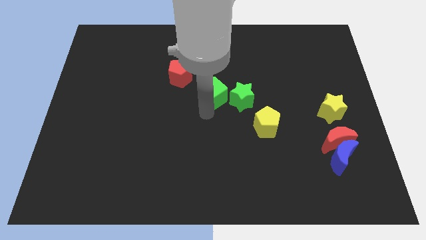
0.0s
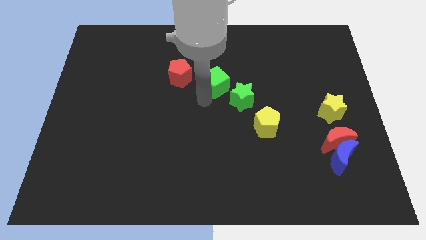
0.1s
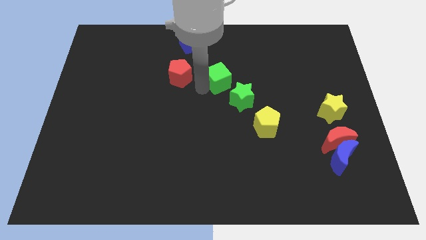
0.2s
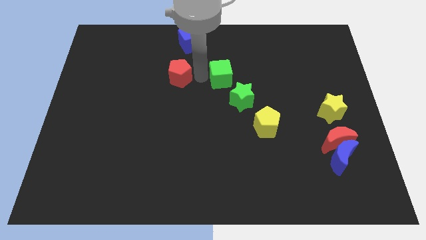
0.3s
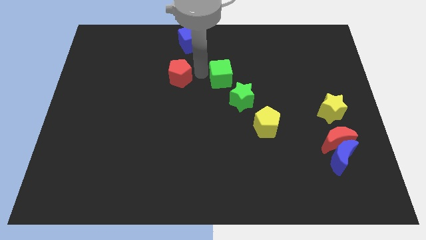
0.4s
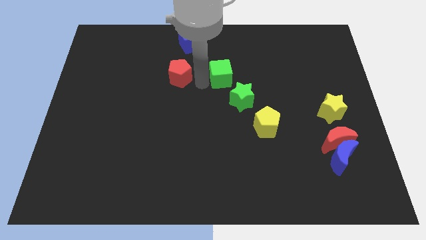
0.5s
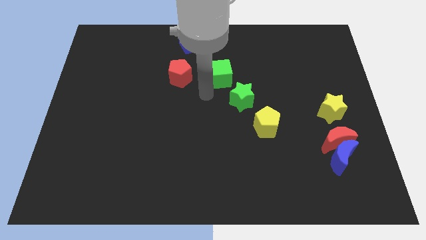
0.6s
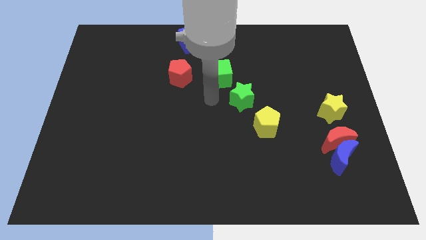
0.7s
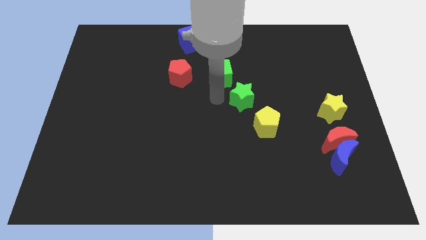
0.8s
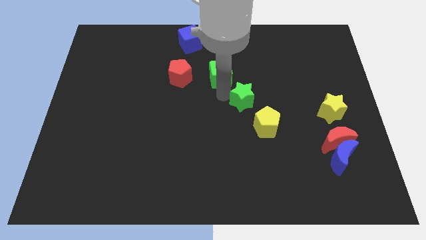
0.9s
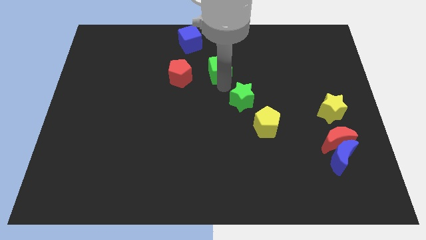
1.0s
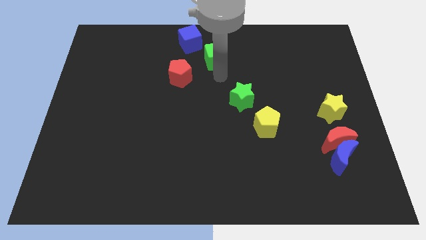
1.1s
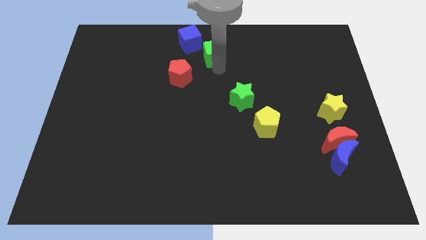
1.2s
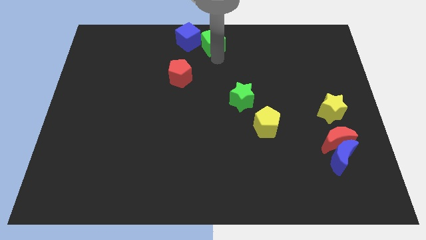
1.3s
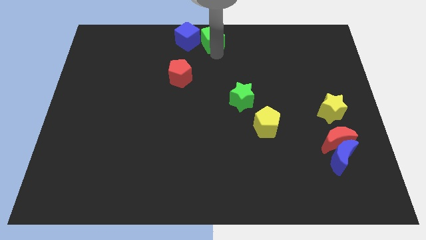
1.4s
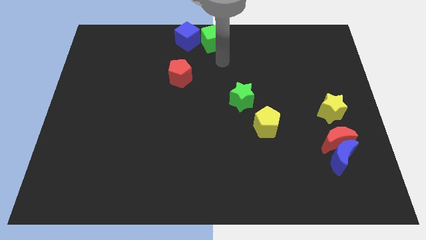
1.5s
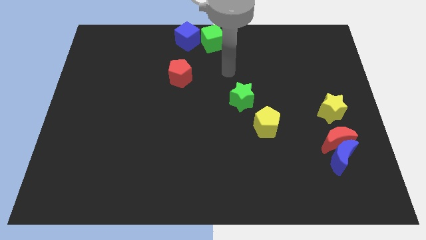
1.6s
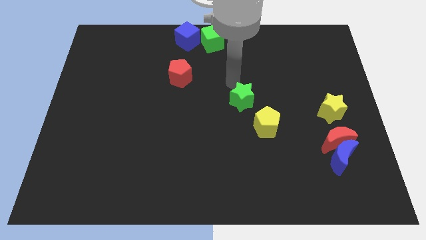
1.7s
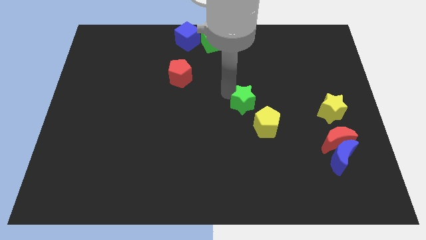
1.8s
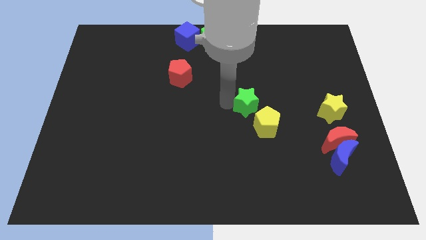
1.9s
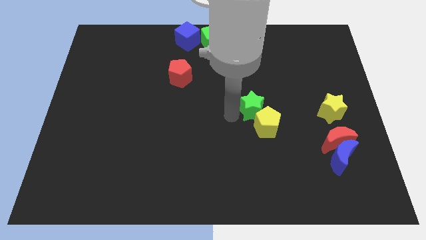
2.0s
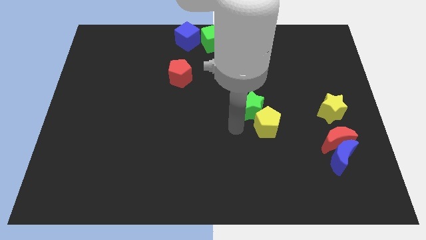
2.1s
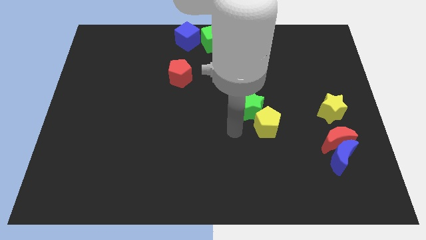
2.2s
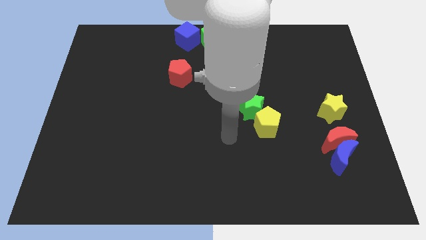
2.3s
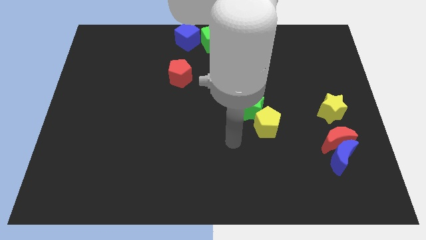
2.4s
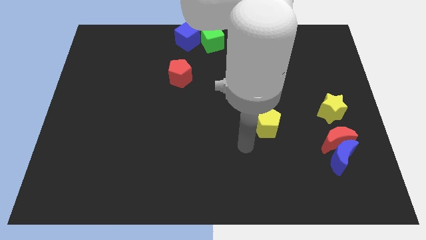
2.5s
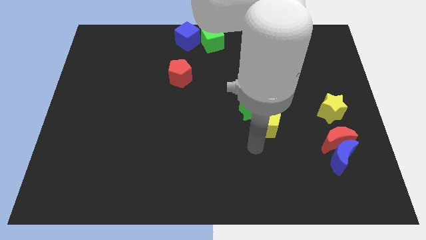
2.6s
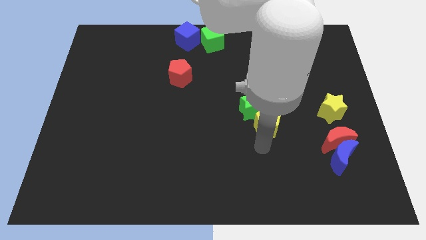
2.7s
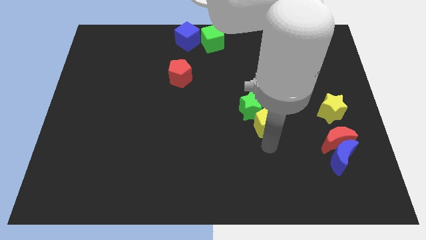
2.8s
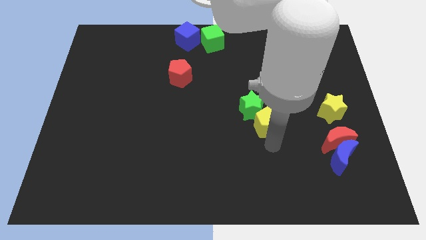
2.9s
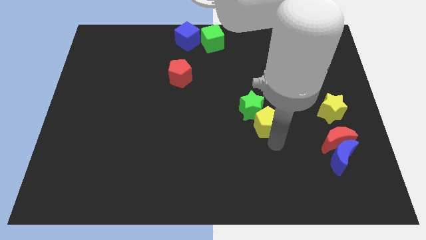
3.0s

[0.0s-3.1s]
separate the green cube from the green star

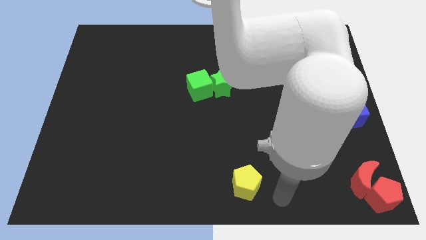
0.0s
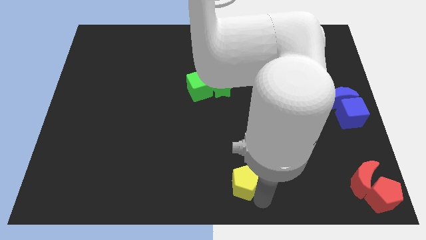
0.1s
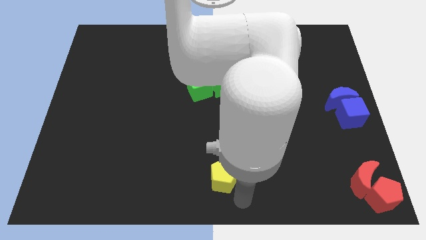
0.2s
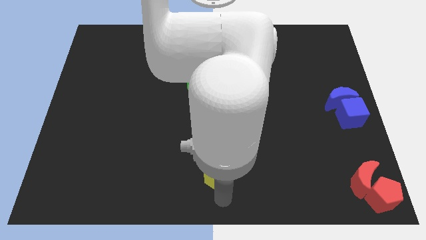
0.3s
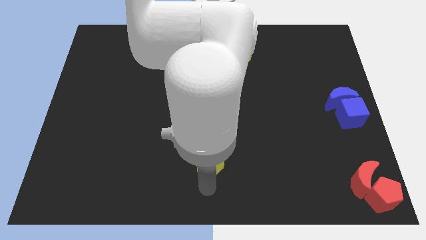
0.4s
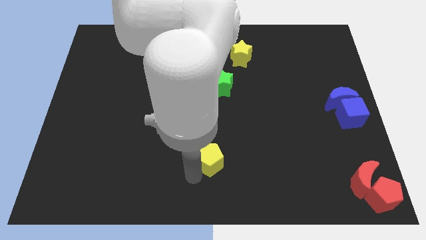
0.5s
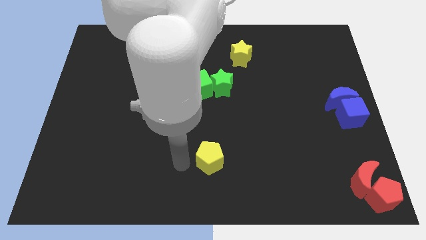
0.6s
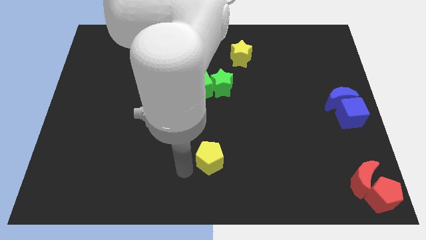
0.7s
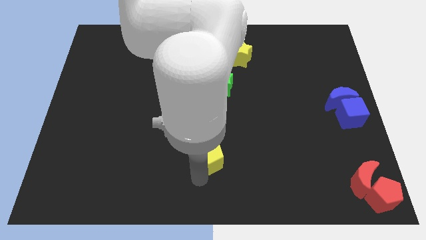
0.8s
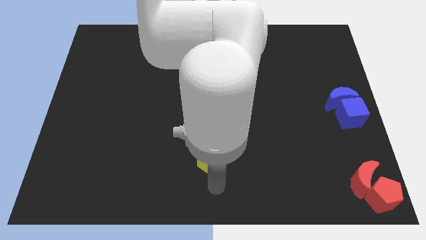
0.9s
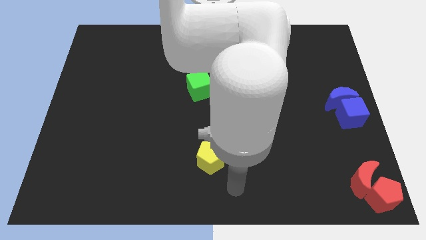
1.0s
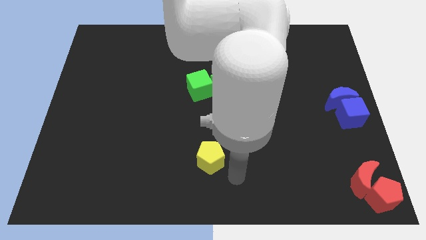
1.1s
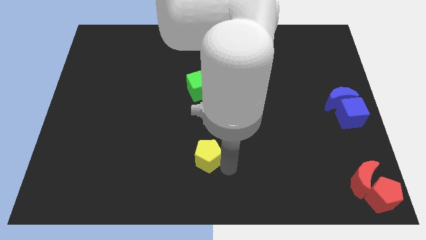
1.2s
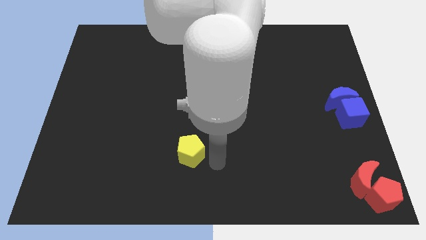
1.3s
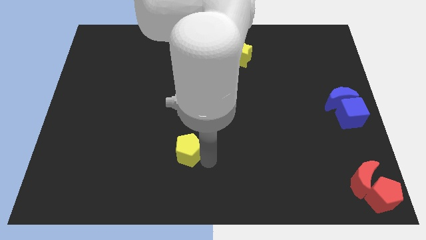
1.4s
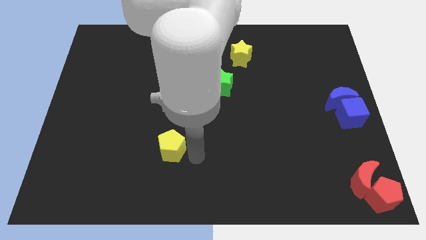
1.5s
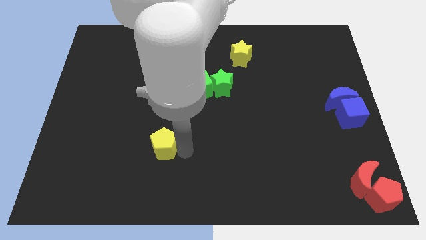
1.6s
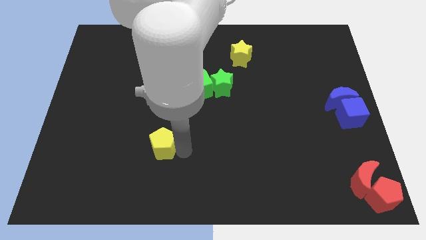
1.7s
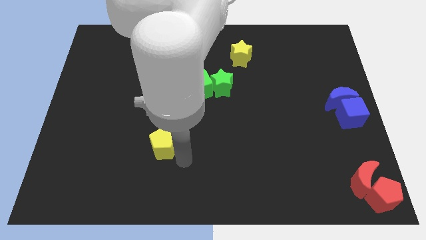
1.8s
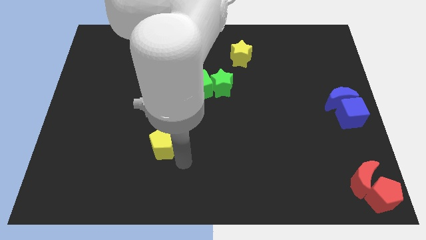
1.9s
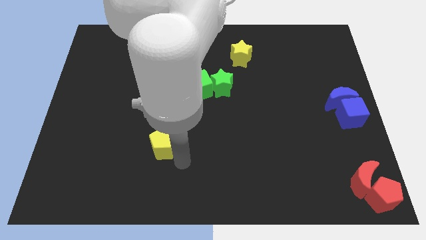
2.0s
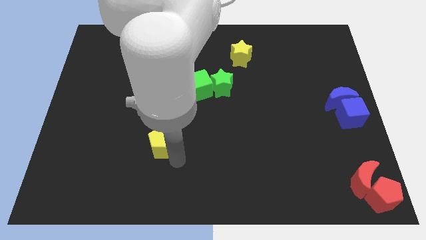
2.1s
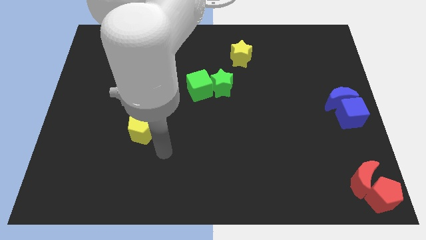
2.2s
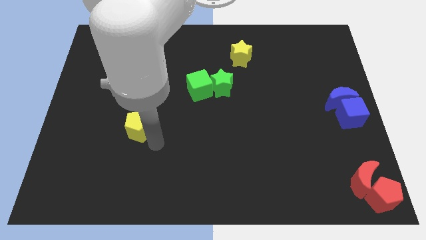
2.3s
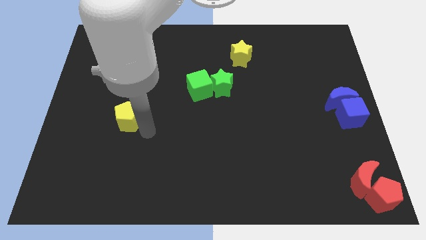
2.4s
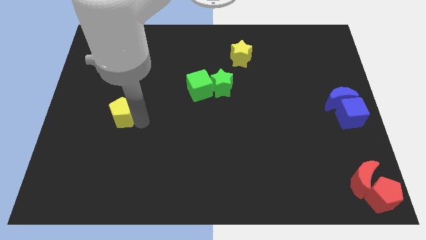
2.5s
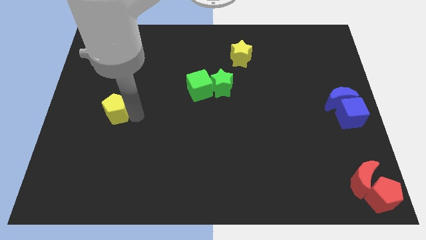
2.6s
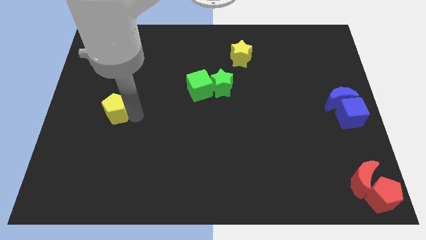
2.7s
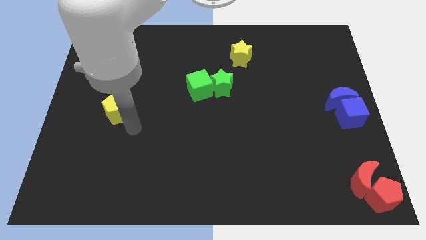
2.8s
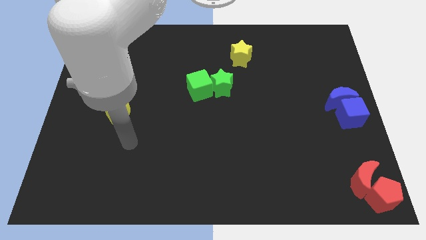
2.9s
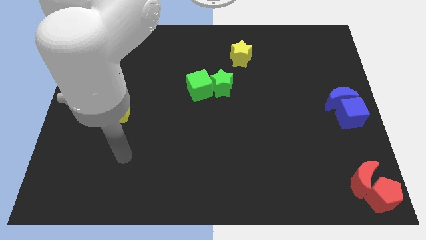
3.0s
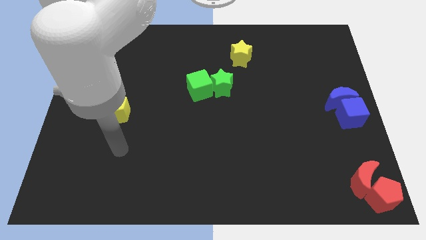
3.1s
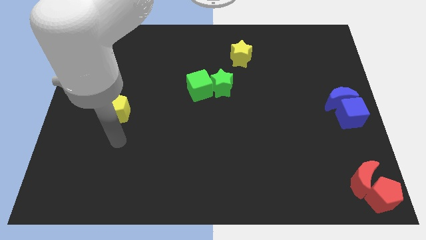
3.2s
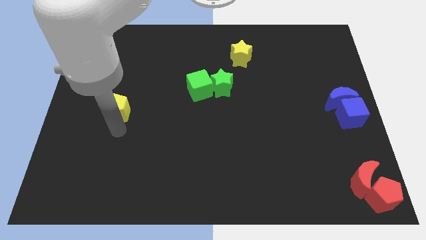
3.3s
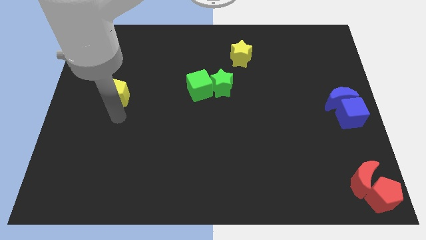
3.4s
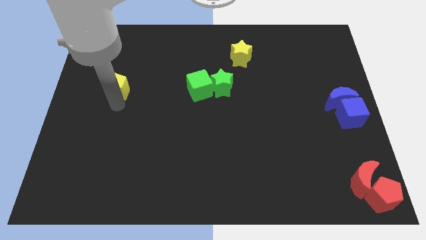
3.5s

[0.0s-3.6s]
move the yellow pentagon horizontally to the left side of the green cube

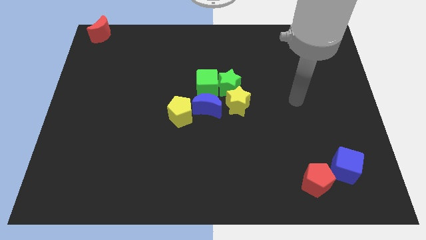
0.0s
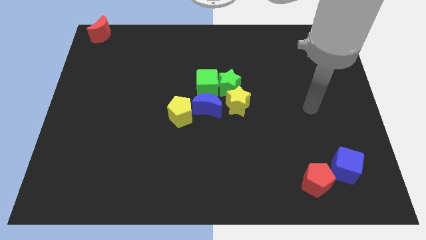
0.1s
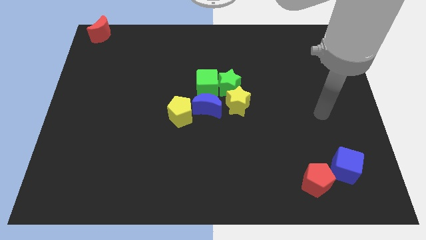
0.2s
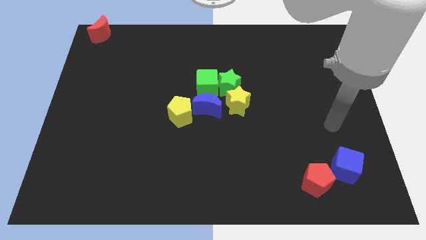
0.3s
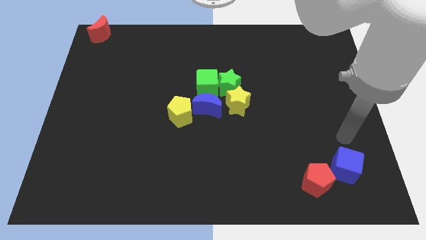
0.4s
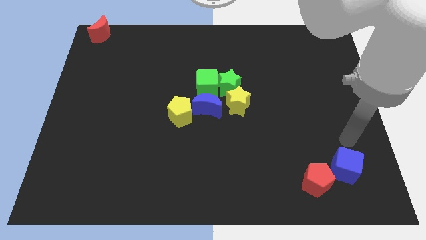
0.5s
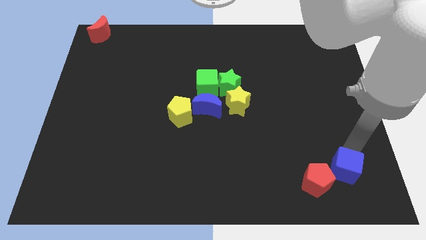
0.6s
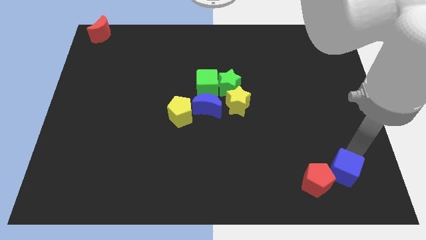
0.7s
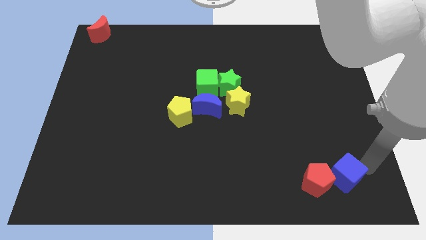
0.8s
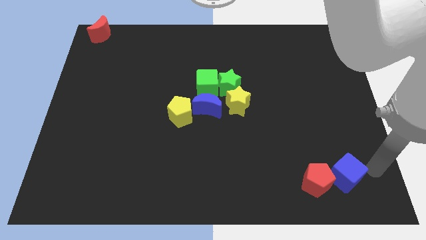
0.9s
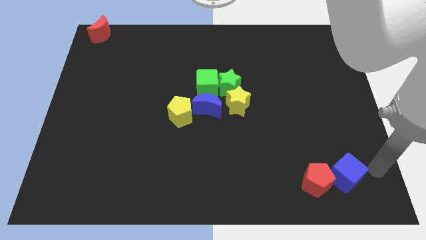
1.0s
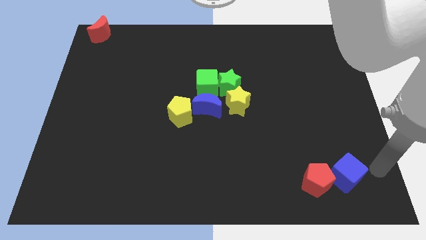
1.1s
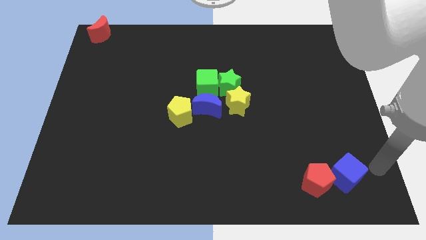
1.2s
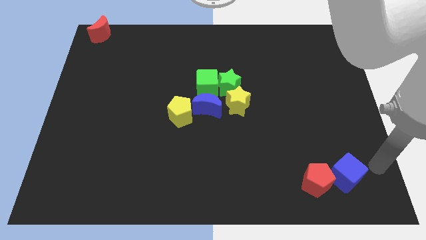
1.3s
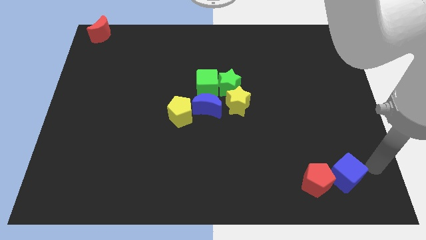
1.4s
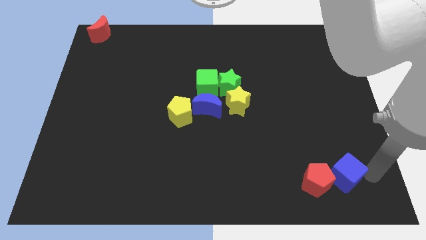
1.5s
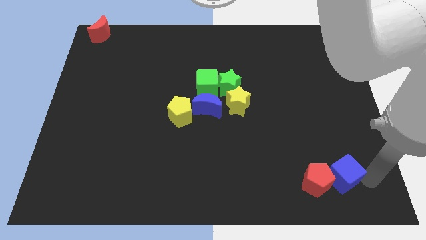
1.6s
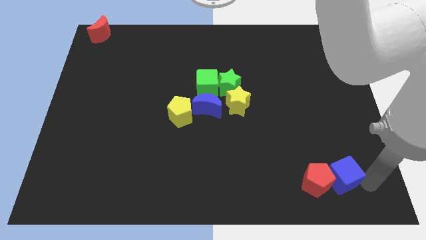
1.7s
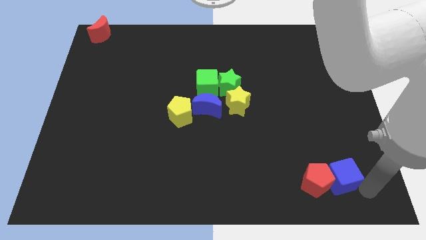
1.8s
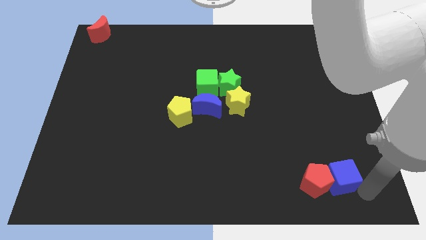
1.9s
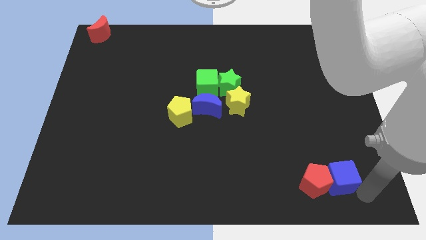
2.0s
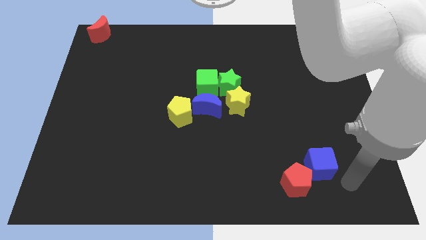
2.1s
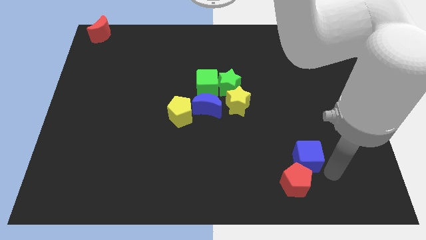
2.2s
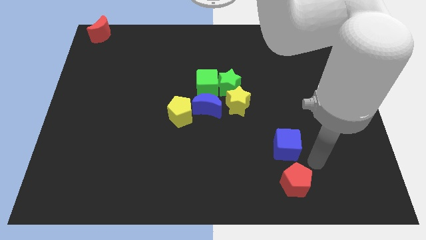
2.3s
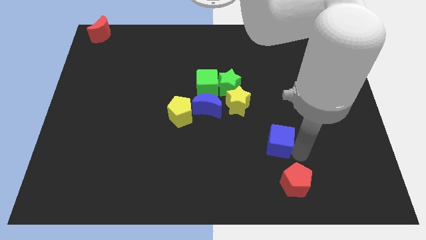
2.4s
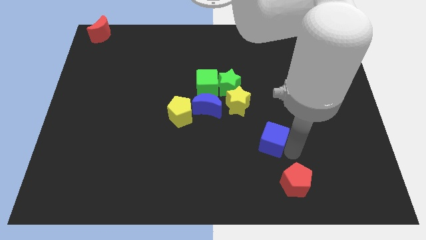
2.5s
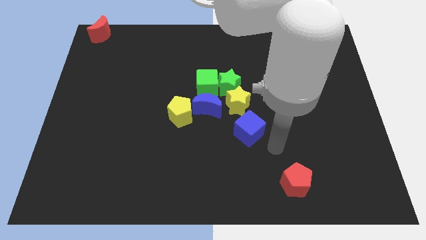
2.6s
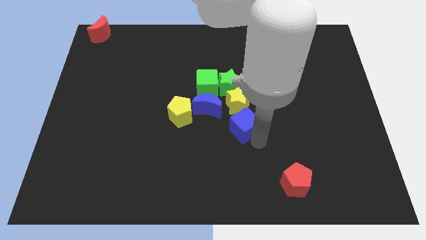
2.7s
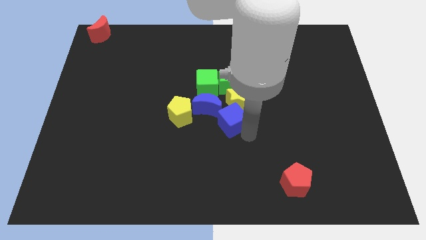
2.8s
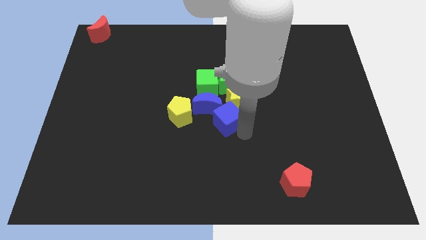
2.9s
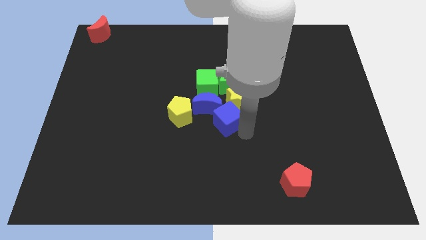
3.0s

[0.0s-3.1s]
move the blue cube into the group of the blocks
